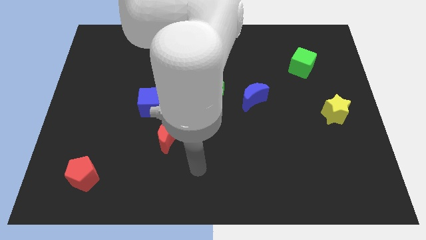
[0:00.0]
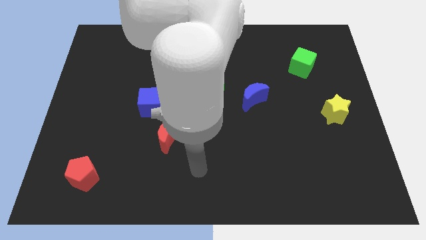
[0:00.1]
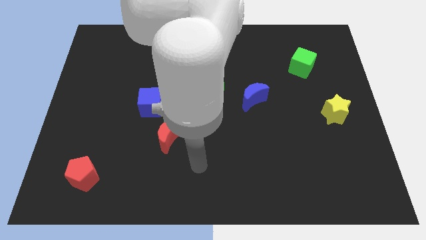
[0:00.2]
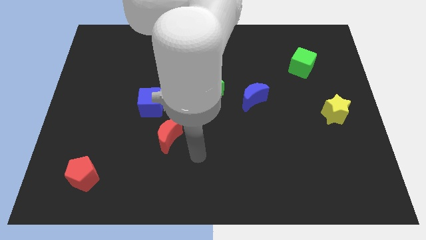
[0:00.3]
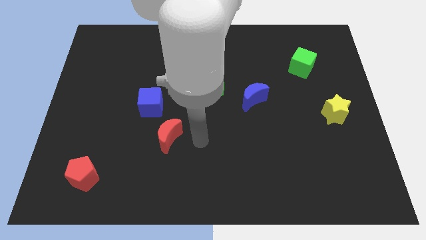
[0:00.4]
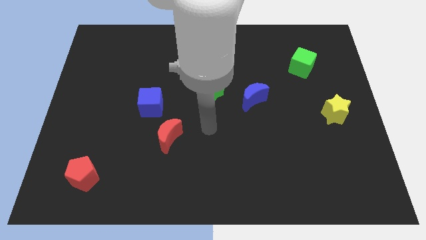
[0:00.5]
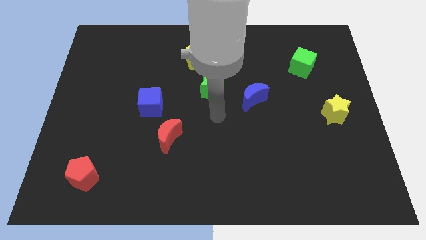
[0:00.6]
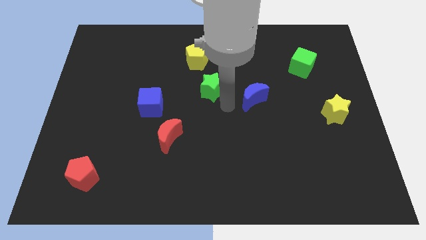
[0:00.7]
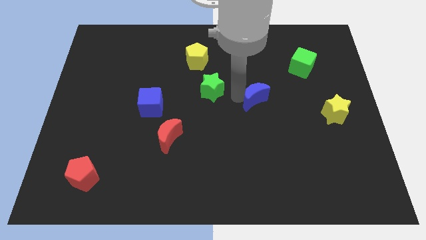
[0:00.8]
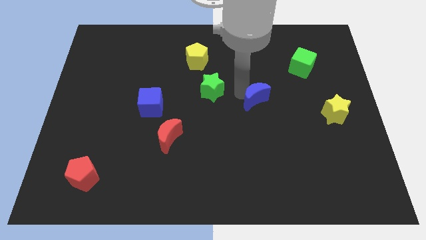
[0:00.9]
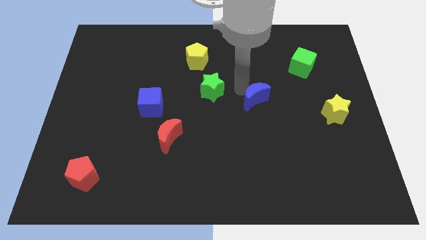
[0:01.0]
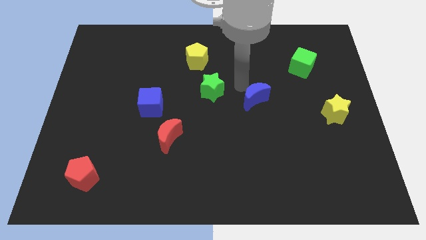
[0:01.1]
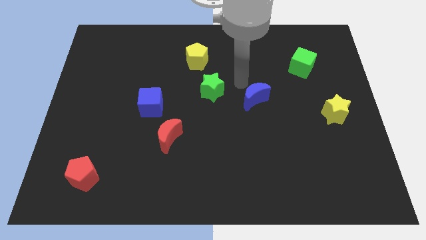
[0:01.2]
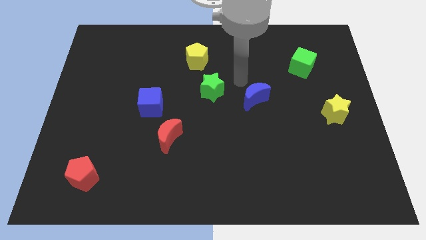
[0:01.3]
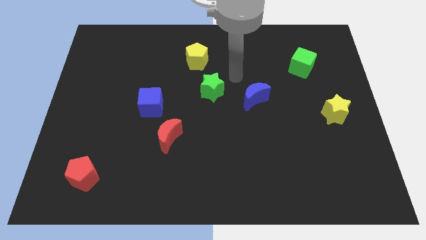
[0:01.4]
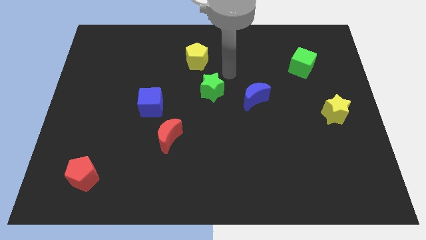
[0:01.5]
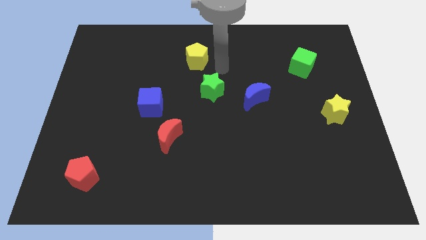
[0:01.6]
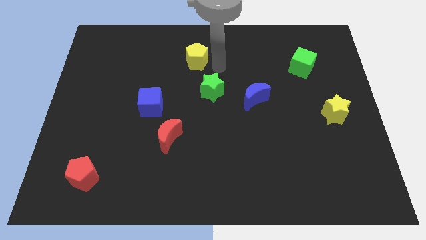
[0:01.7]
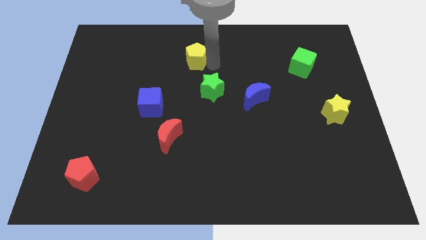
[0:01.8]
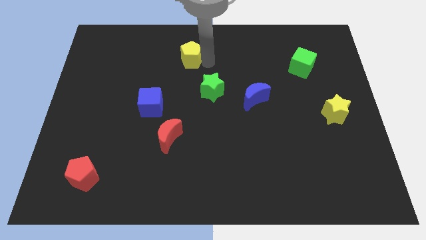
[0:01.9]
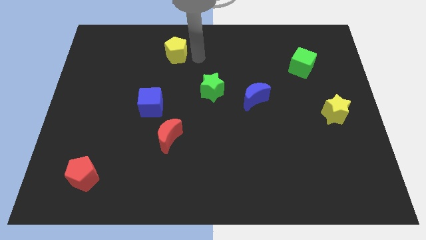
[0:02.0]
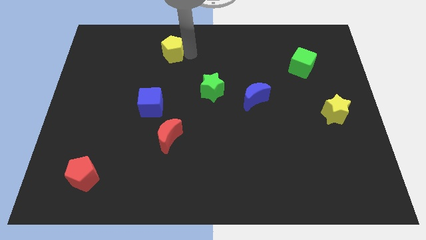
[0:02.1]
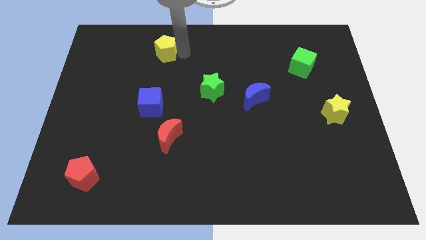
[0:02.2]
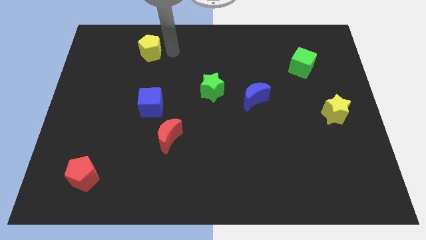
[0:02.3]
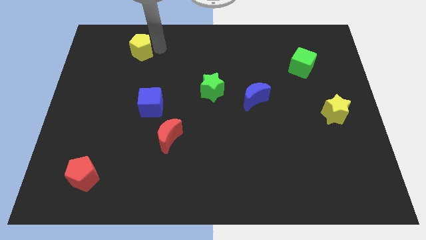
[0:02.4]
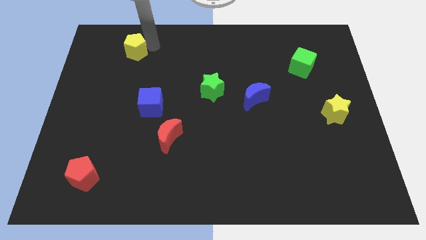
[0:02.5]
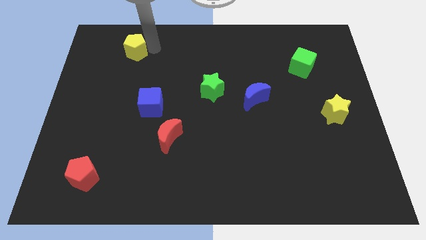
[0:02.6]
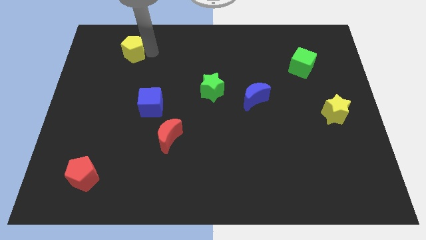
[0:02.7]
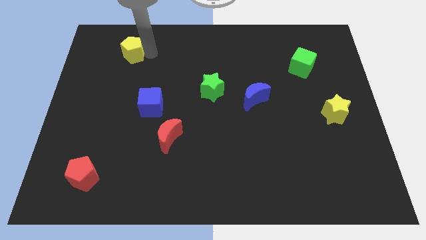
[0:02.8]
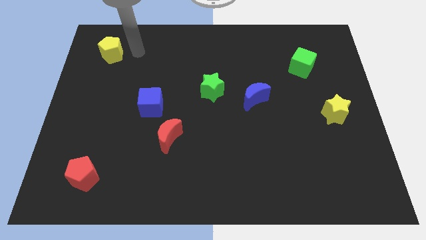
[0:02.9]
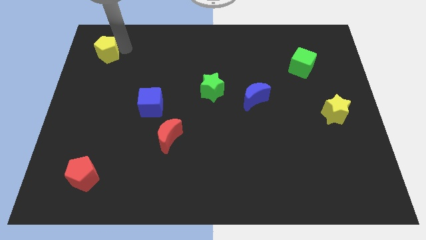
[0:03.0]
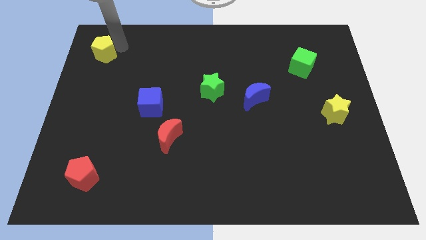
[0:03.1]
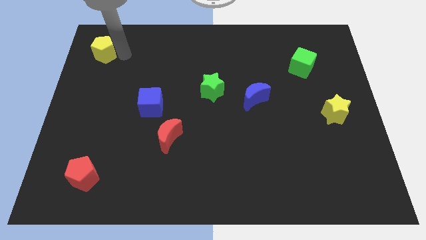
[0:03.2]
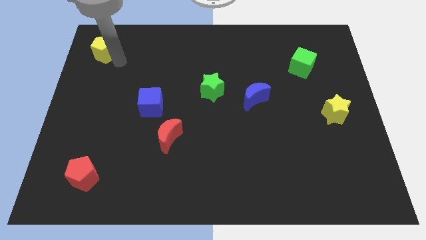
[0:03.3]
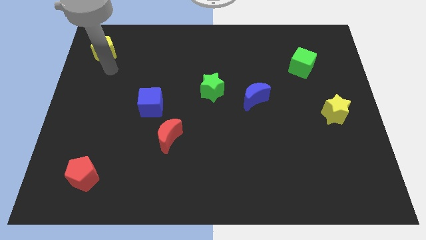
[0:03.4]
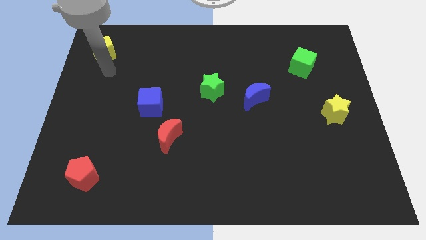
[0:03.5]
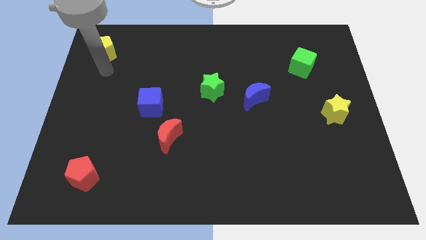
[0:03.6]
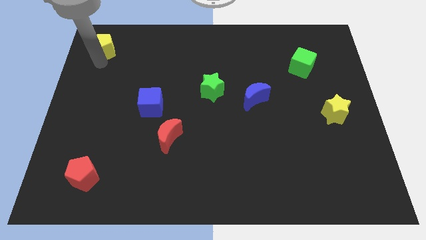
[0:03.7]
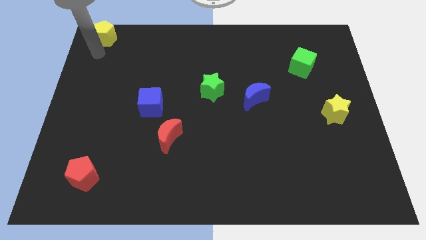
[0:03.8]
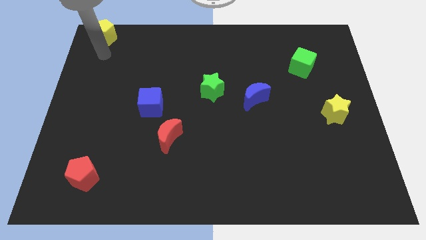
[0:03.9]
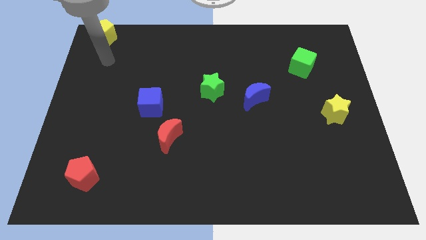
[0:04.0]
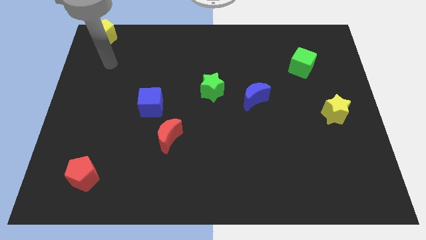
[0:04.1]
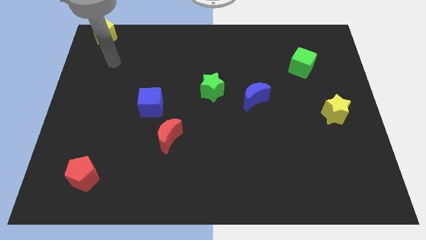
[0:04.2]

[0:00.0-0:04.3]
push the yellow pentagon towards the top left corner of the board

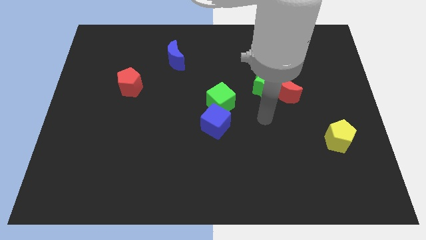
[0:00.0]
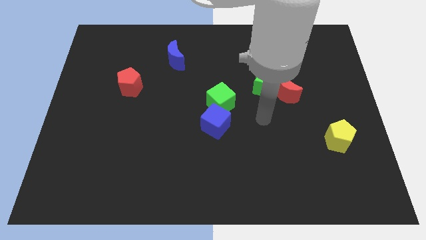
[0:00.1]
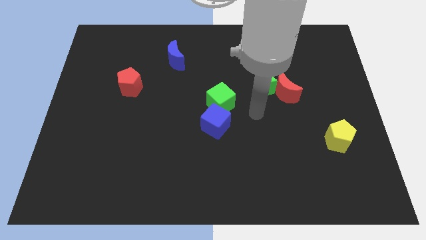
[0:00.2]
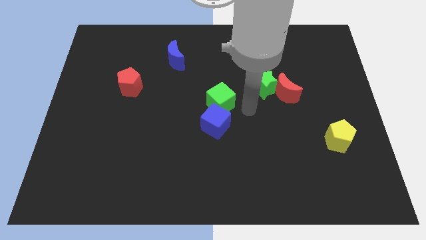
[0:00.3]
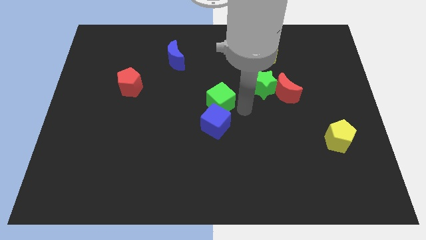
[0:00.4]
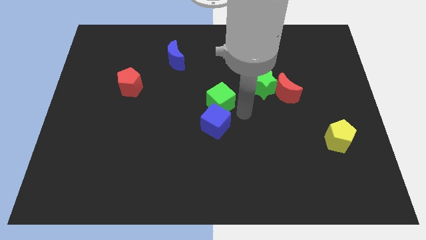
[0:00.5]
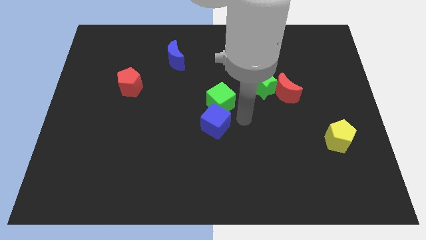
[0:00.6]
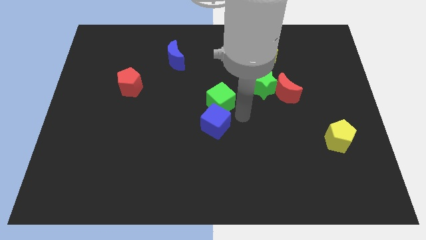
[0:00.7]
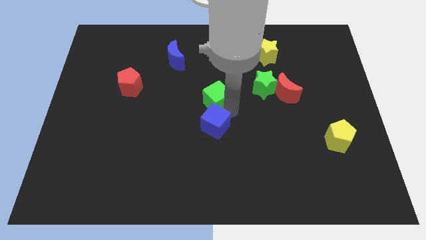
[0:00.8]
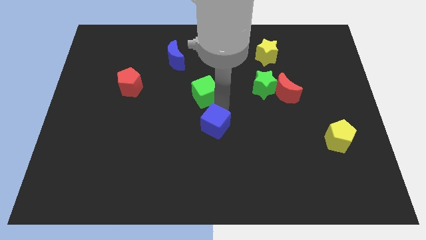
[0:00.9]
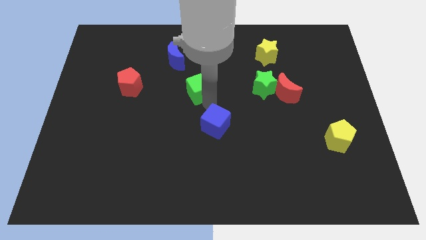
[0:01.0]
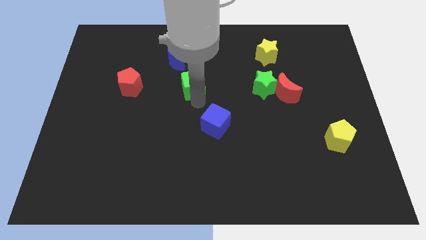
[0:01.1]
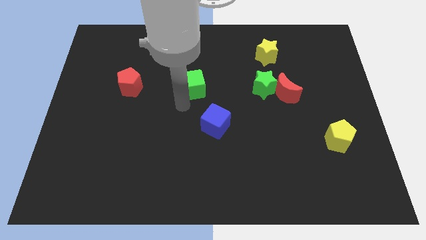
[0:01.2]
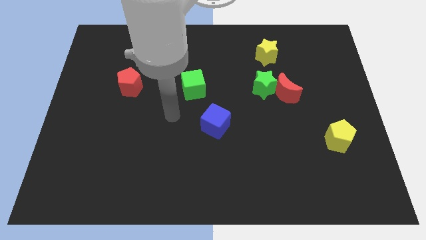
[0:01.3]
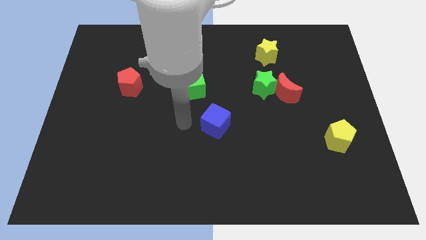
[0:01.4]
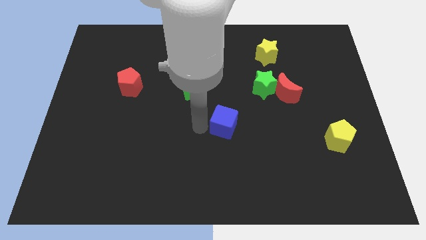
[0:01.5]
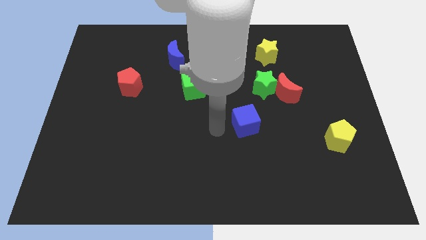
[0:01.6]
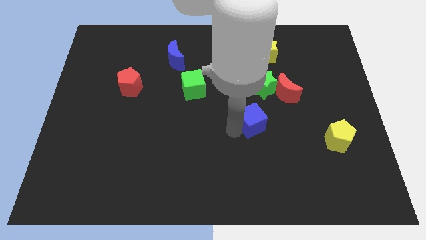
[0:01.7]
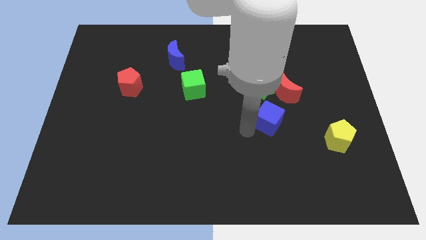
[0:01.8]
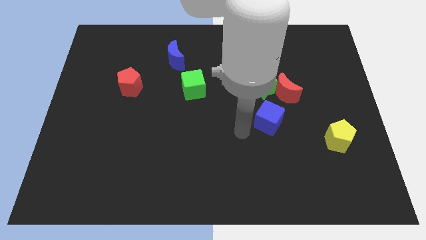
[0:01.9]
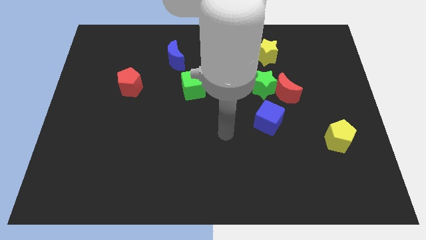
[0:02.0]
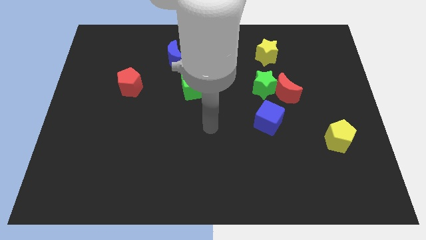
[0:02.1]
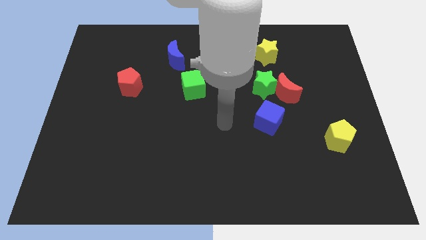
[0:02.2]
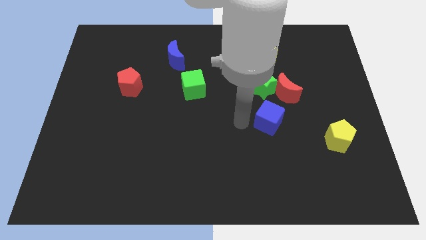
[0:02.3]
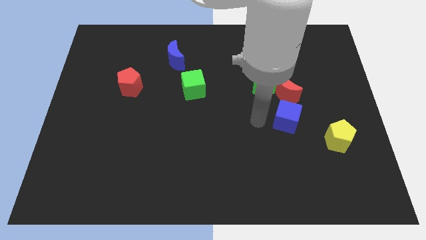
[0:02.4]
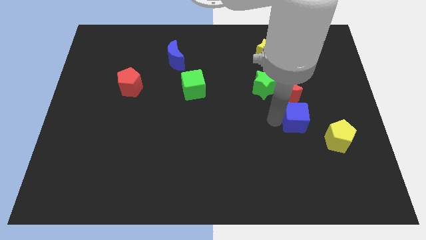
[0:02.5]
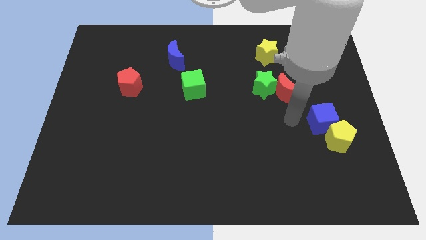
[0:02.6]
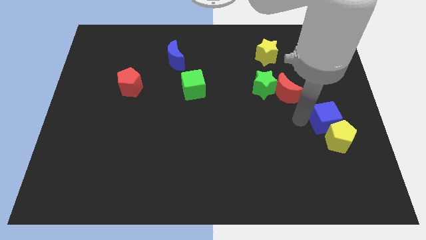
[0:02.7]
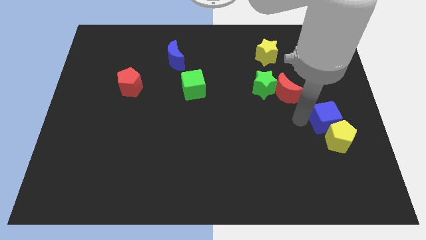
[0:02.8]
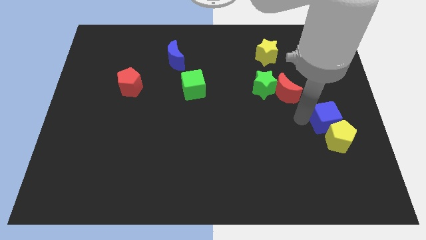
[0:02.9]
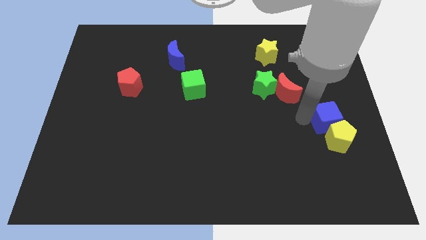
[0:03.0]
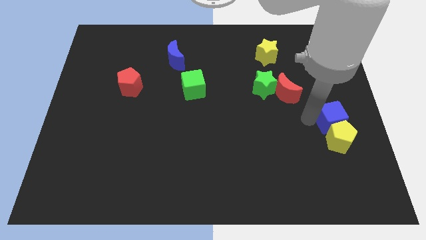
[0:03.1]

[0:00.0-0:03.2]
move the cubes in different directions

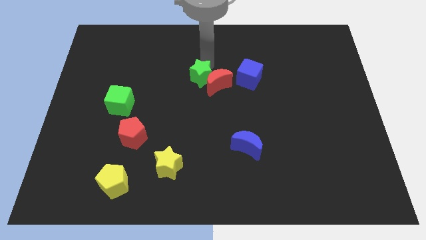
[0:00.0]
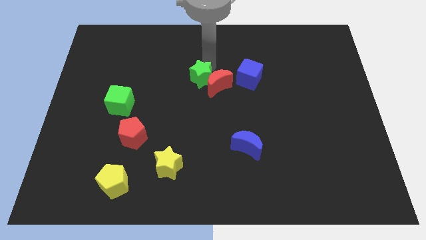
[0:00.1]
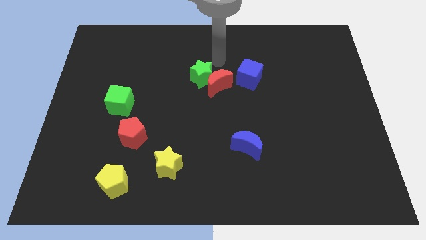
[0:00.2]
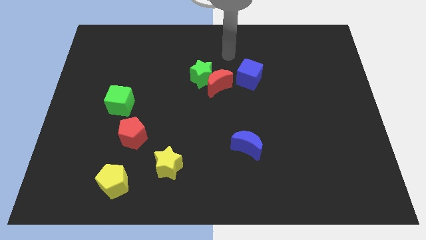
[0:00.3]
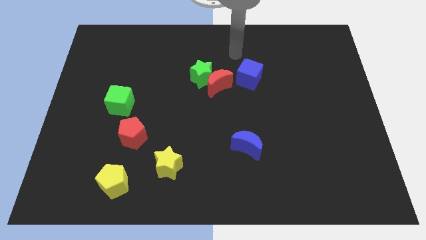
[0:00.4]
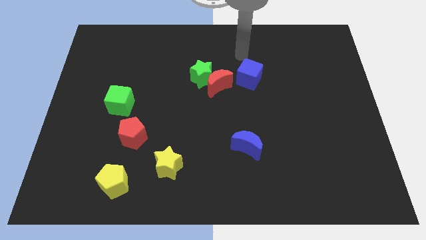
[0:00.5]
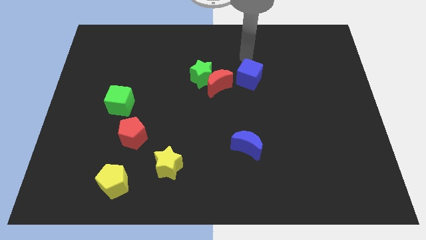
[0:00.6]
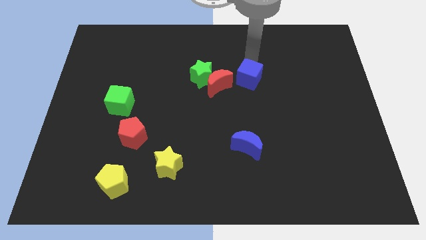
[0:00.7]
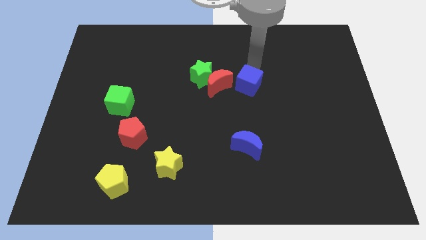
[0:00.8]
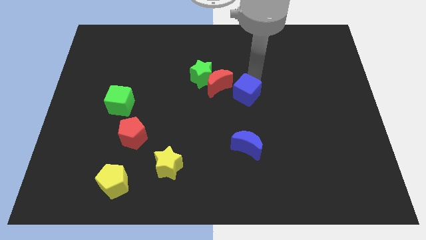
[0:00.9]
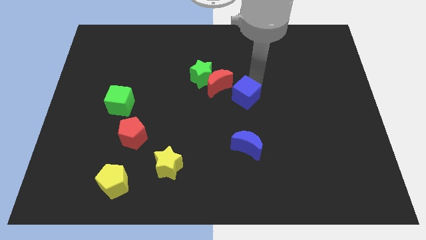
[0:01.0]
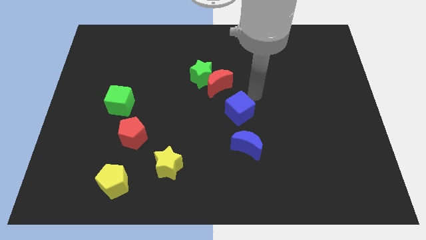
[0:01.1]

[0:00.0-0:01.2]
push the blue cube slightly to the bottom

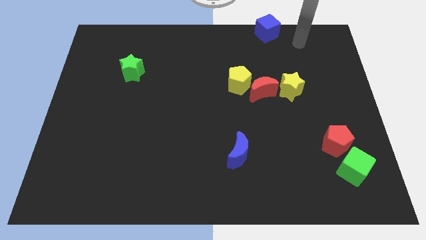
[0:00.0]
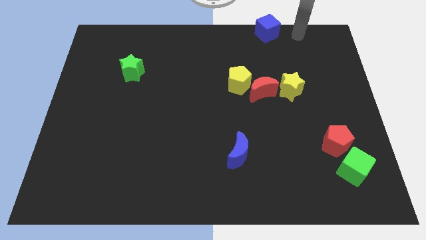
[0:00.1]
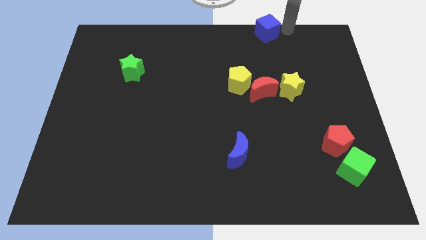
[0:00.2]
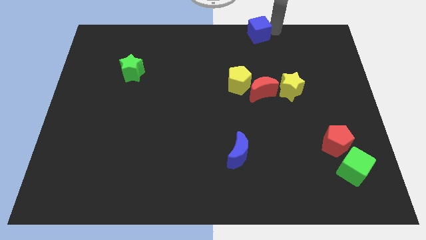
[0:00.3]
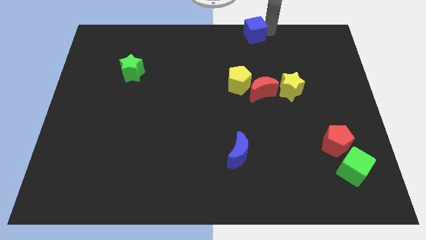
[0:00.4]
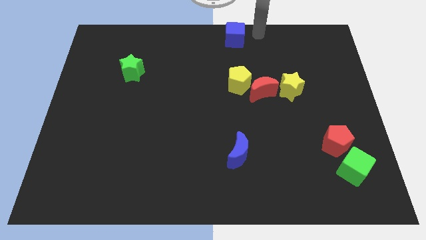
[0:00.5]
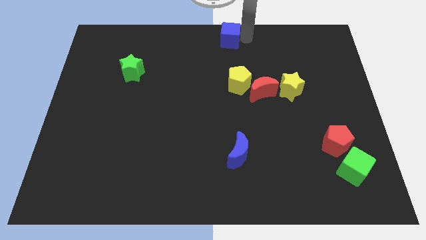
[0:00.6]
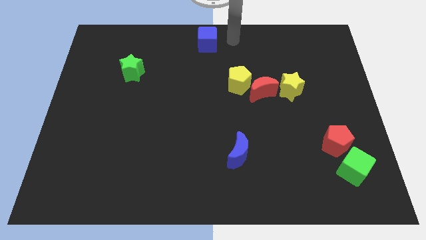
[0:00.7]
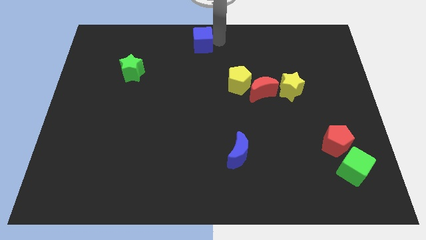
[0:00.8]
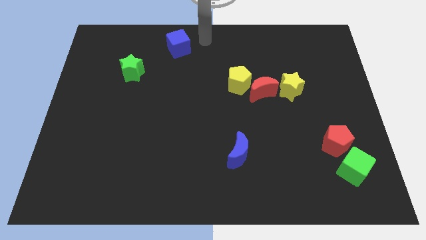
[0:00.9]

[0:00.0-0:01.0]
push the blue cube to the top center of the board
